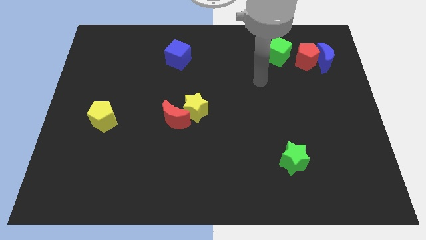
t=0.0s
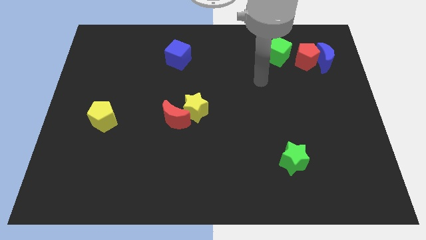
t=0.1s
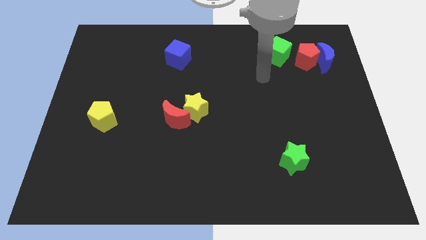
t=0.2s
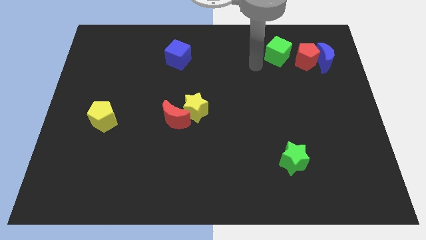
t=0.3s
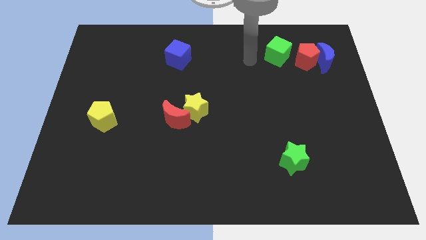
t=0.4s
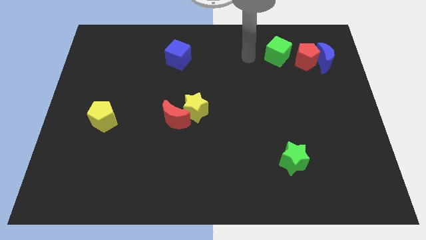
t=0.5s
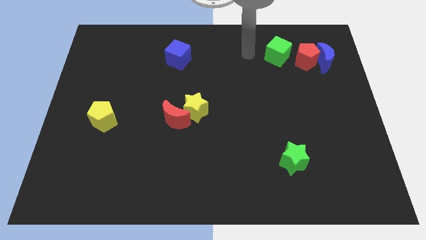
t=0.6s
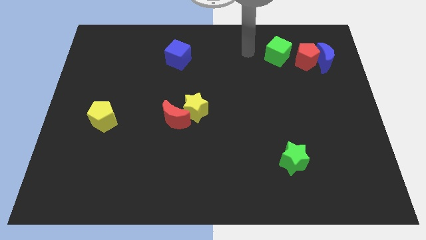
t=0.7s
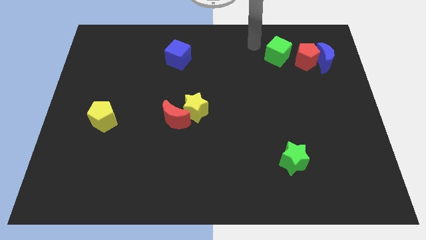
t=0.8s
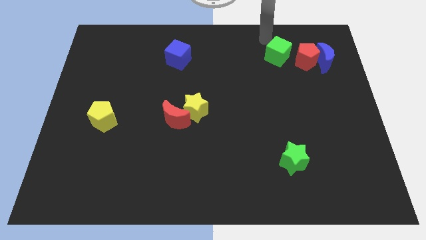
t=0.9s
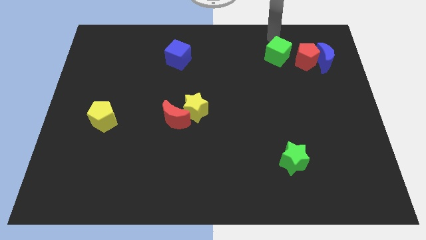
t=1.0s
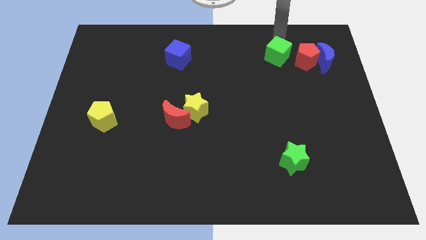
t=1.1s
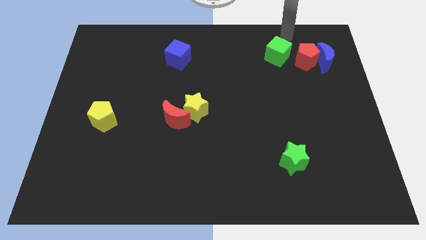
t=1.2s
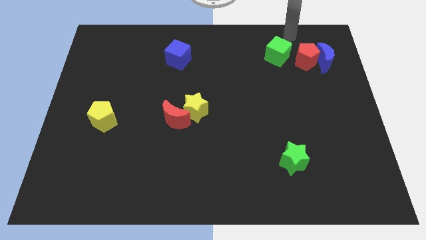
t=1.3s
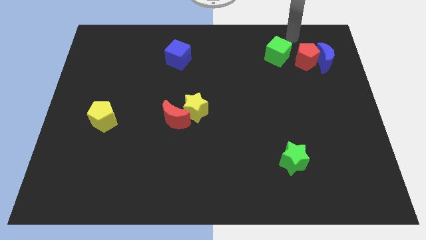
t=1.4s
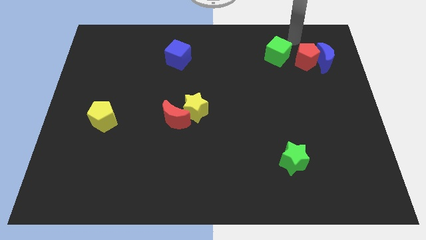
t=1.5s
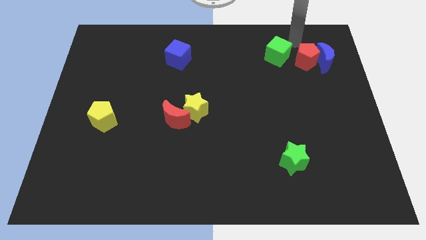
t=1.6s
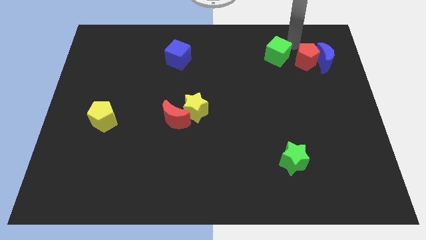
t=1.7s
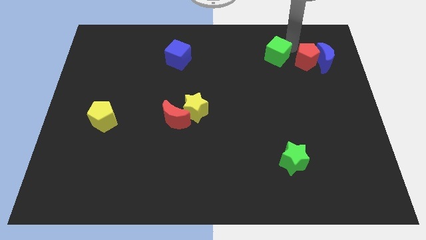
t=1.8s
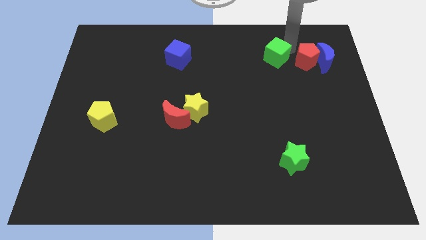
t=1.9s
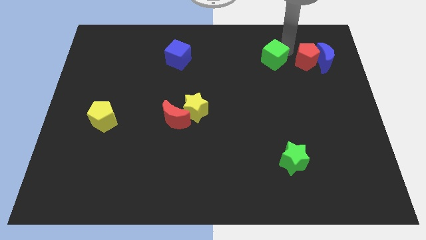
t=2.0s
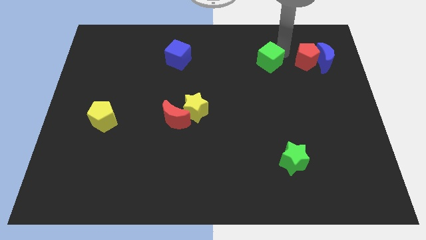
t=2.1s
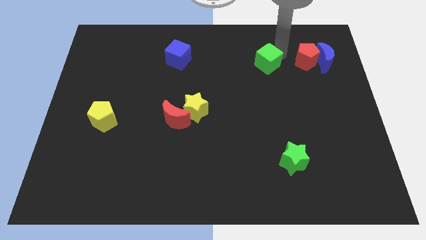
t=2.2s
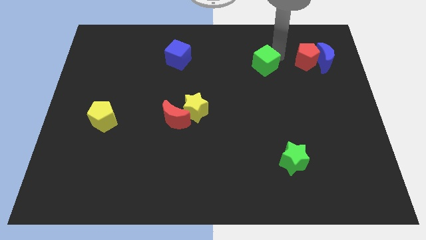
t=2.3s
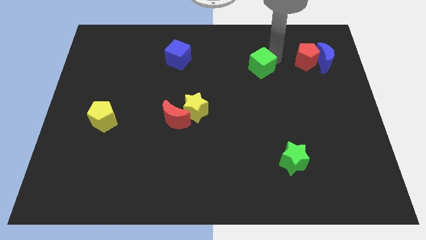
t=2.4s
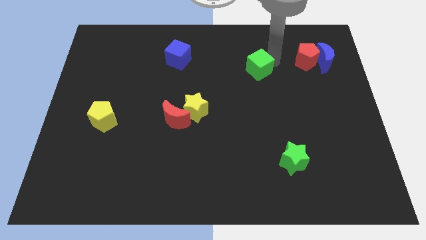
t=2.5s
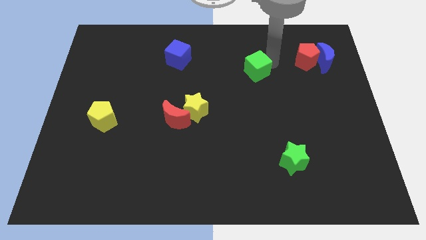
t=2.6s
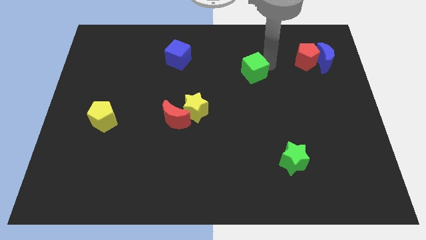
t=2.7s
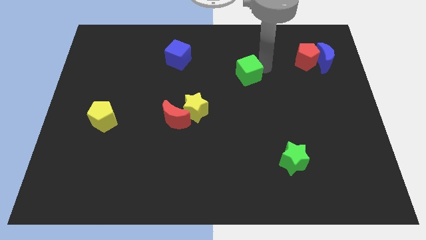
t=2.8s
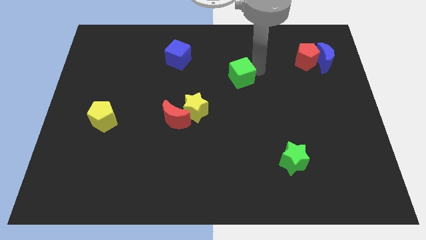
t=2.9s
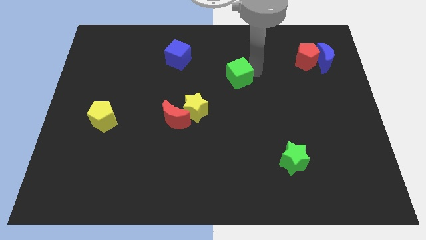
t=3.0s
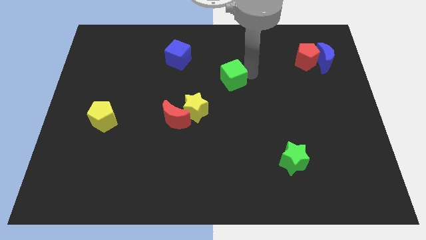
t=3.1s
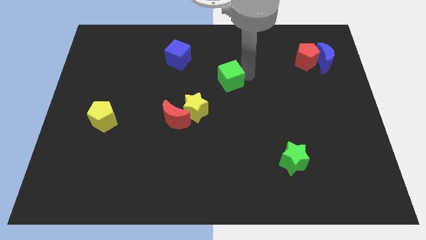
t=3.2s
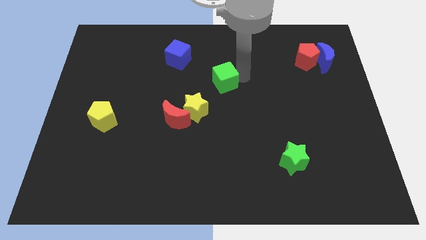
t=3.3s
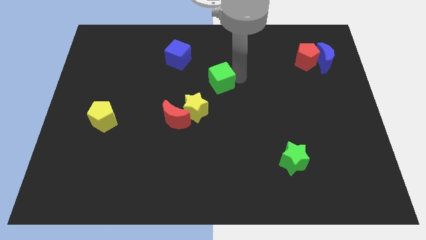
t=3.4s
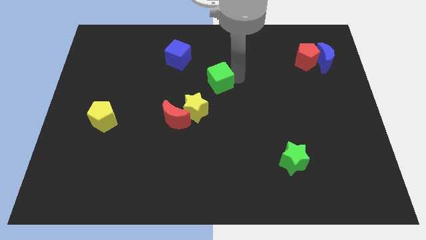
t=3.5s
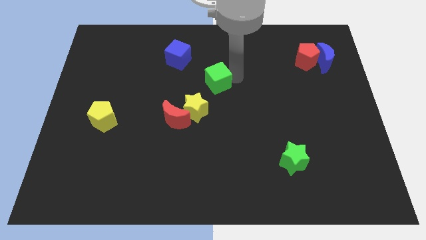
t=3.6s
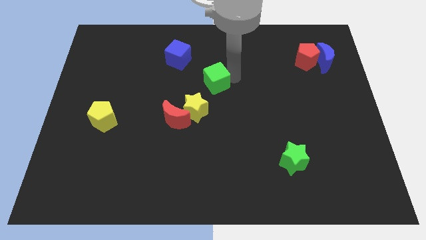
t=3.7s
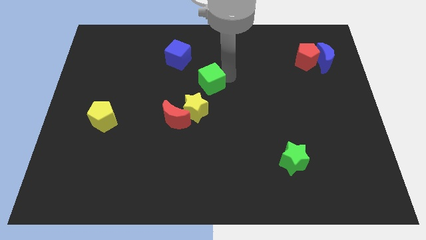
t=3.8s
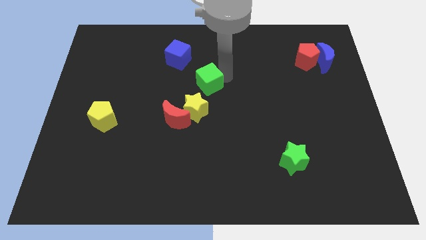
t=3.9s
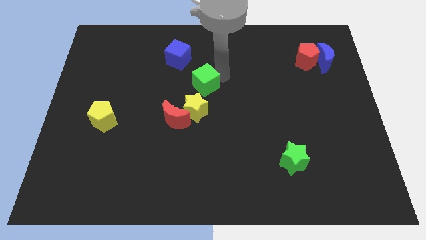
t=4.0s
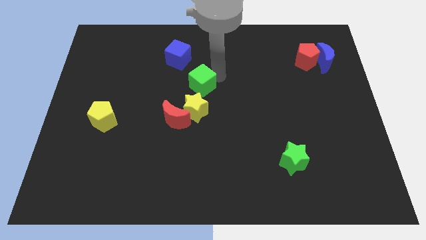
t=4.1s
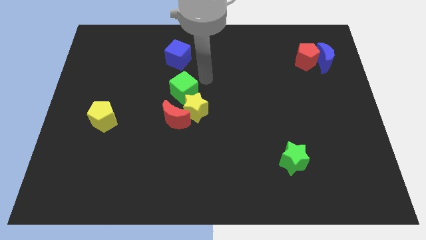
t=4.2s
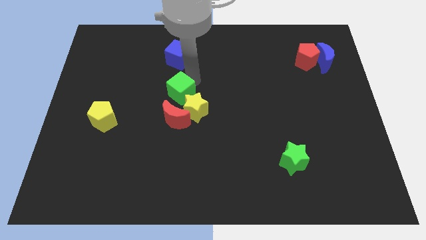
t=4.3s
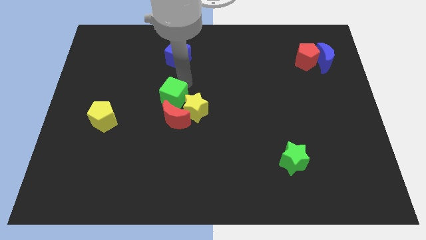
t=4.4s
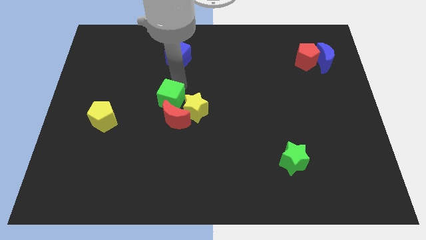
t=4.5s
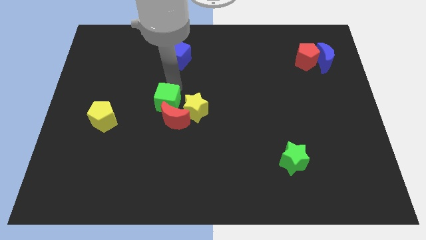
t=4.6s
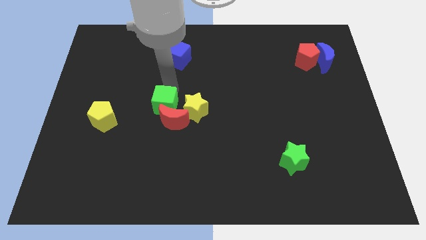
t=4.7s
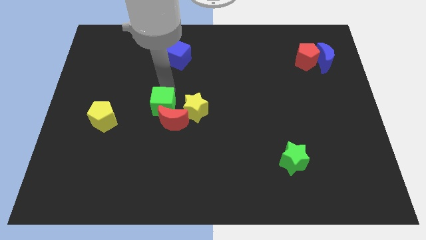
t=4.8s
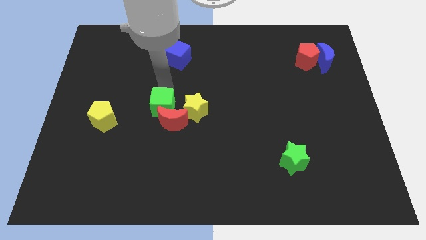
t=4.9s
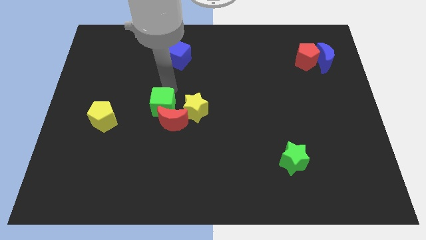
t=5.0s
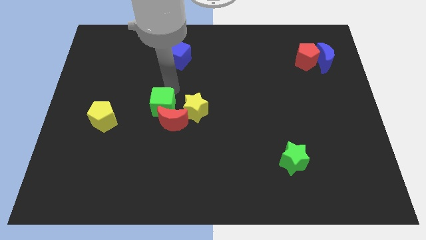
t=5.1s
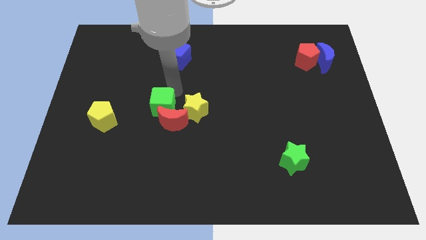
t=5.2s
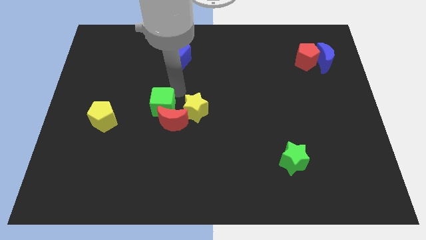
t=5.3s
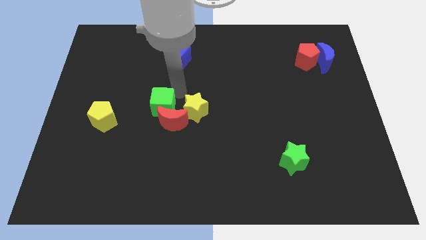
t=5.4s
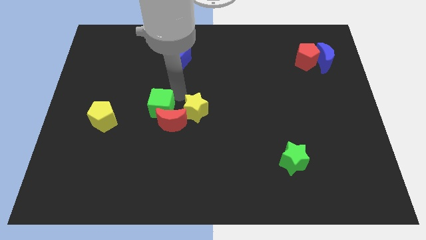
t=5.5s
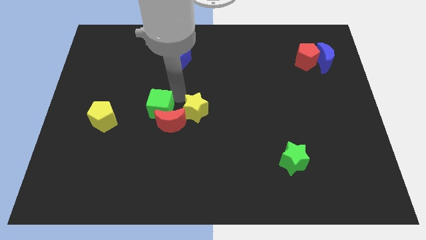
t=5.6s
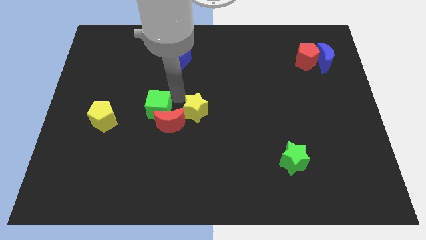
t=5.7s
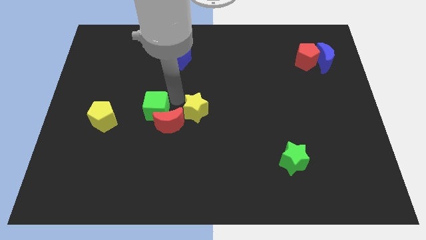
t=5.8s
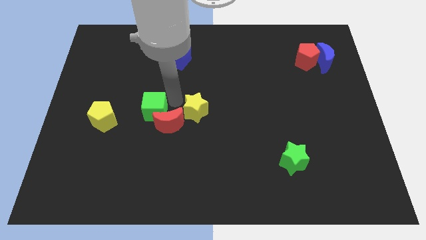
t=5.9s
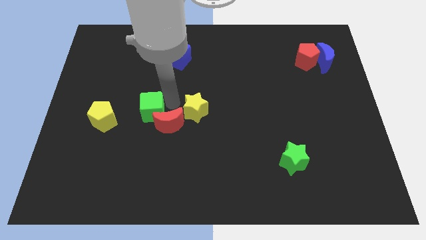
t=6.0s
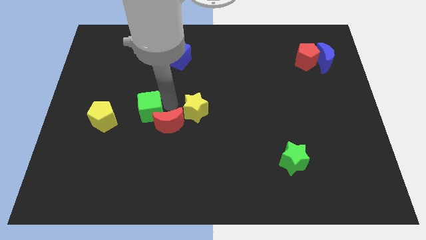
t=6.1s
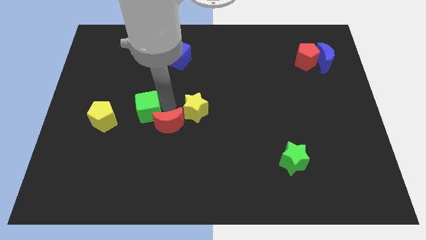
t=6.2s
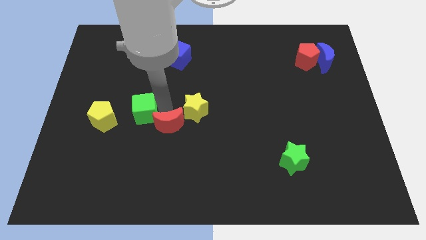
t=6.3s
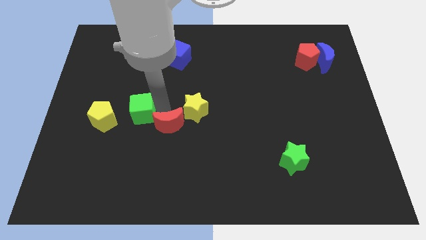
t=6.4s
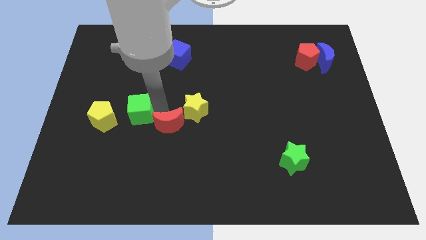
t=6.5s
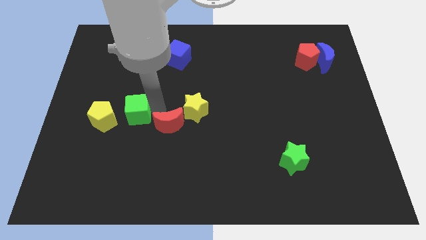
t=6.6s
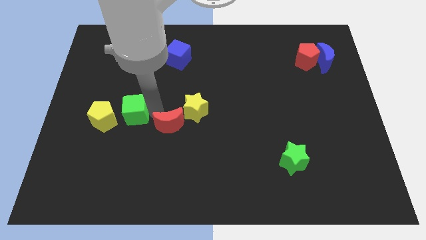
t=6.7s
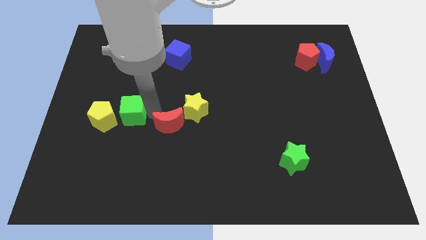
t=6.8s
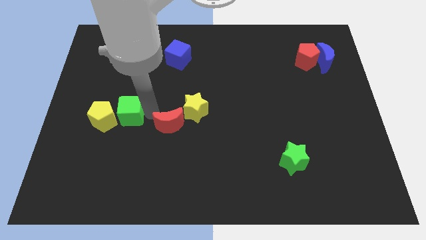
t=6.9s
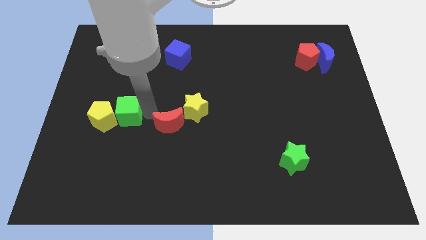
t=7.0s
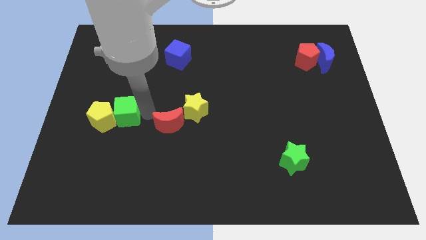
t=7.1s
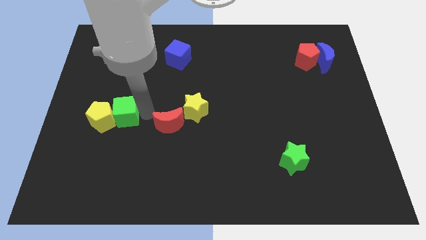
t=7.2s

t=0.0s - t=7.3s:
slide the green cube towards the yellow pentagon

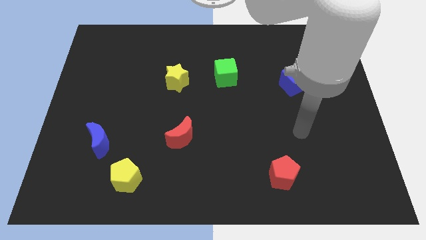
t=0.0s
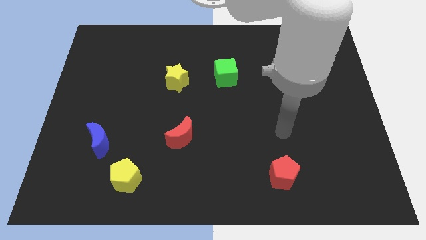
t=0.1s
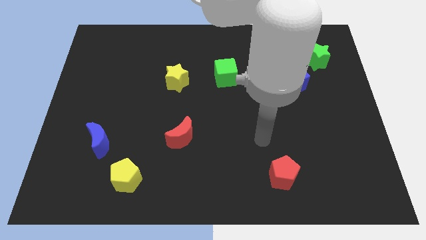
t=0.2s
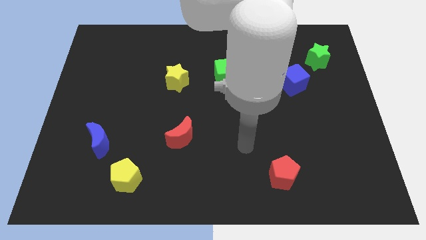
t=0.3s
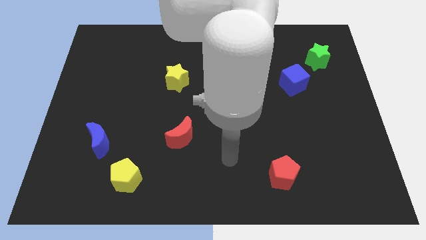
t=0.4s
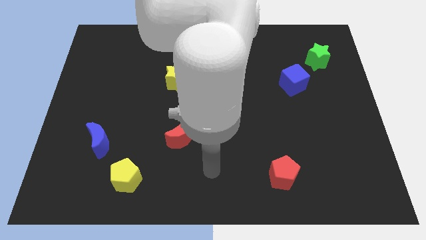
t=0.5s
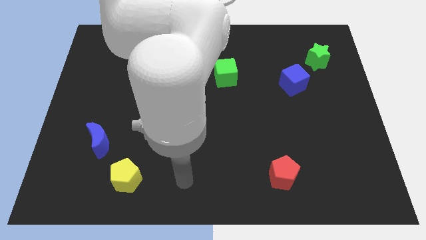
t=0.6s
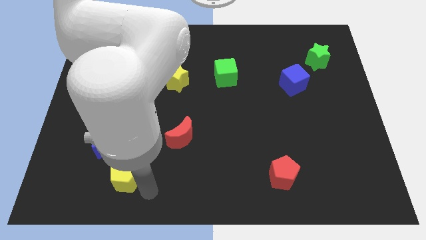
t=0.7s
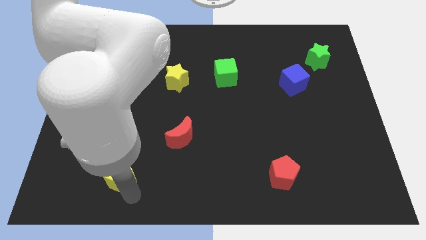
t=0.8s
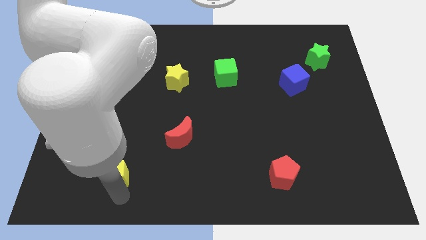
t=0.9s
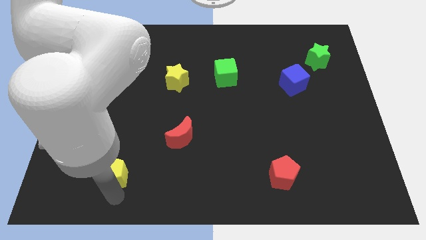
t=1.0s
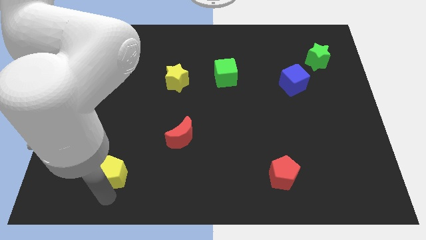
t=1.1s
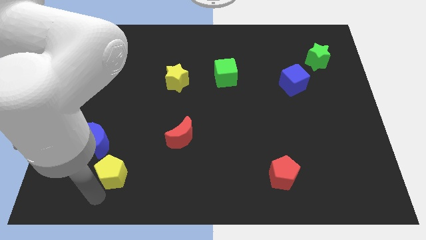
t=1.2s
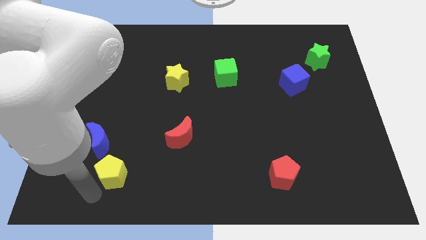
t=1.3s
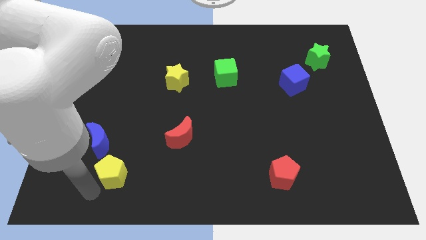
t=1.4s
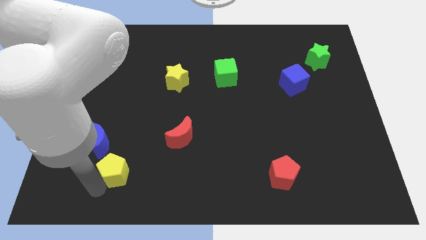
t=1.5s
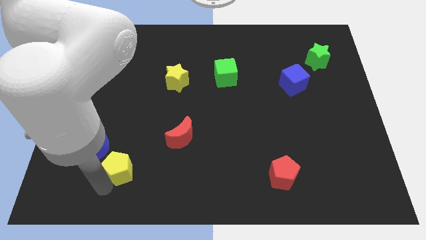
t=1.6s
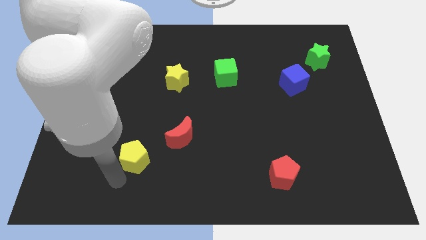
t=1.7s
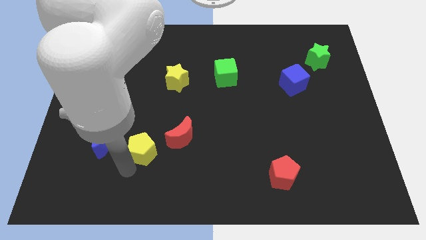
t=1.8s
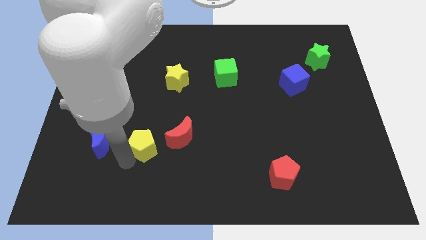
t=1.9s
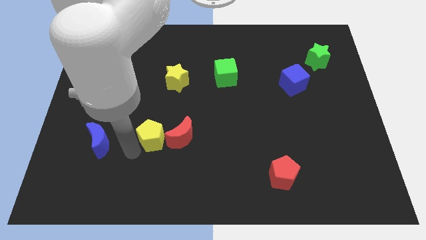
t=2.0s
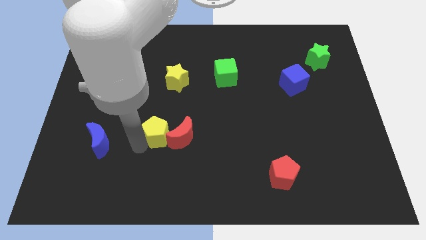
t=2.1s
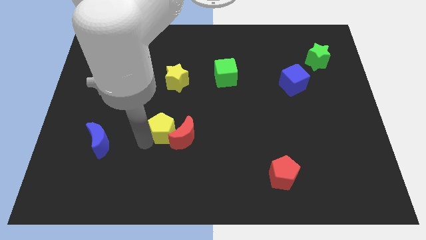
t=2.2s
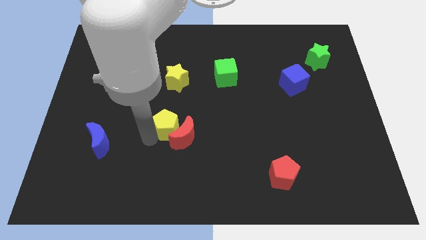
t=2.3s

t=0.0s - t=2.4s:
put the yellow pentagon next to the red moon
